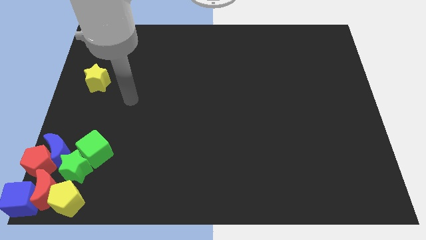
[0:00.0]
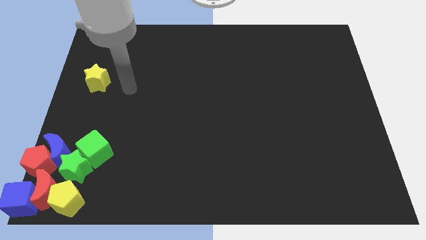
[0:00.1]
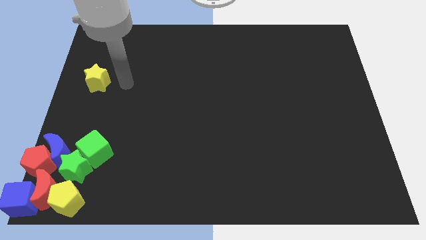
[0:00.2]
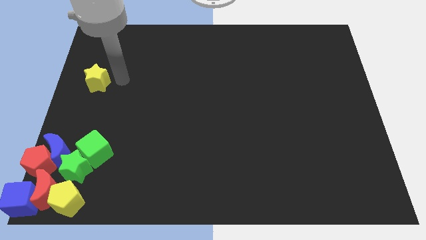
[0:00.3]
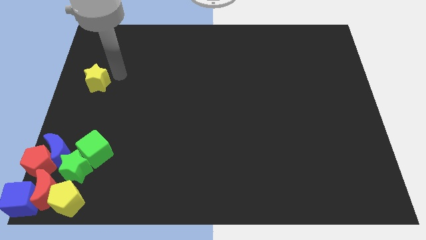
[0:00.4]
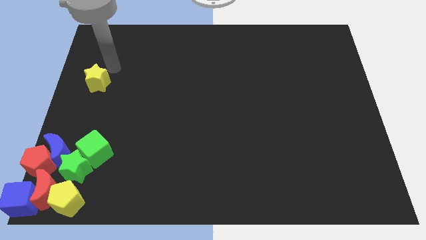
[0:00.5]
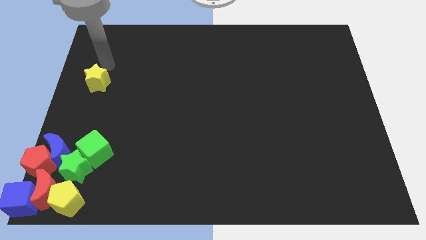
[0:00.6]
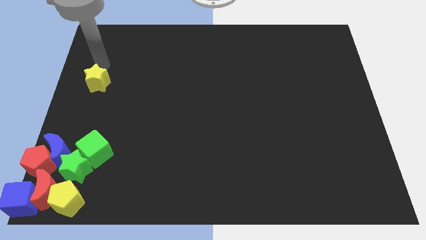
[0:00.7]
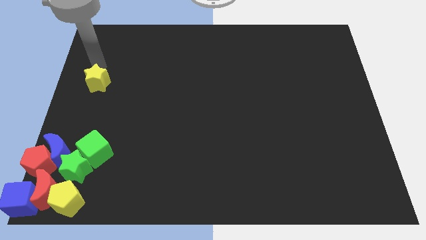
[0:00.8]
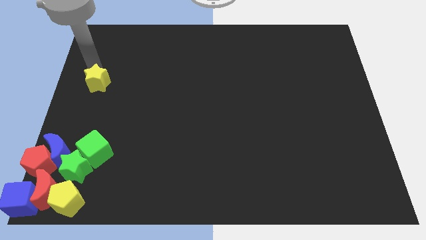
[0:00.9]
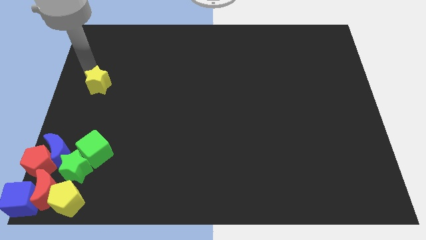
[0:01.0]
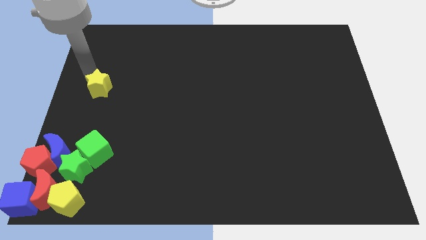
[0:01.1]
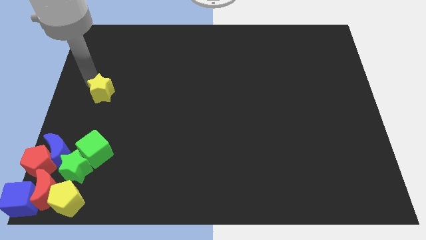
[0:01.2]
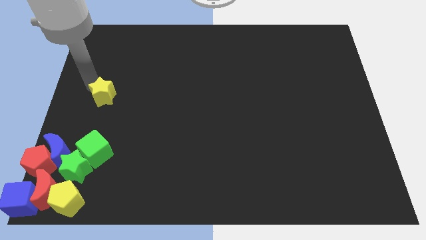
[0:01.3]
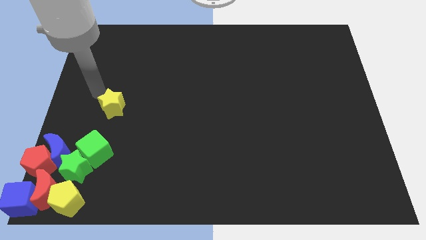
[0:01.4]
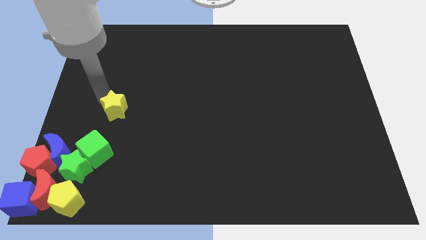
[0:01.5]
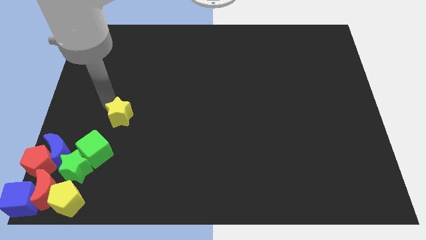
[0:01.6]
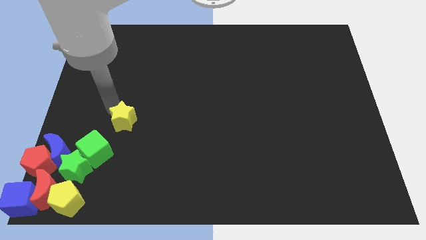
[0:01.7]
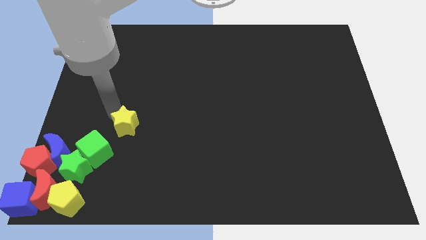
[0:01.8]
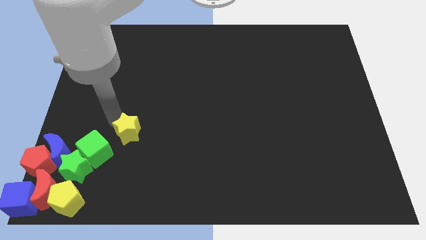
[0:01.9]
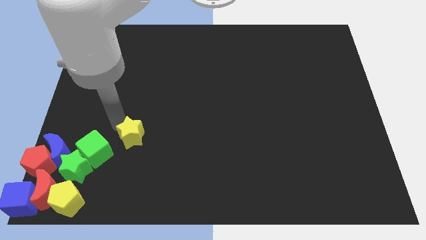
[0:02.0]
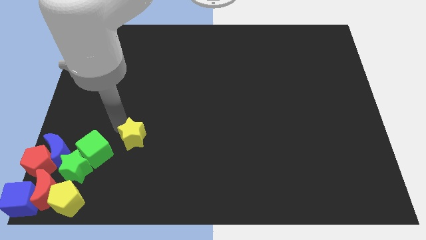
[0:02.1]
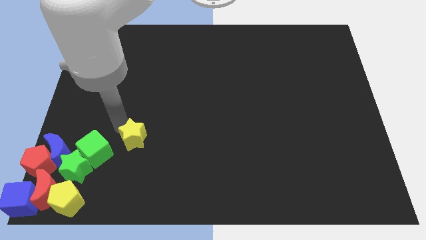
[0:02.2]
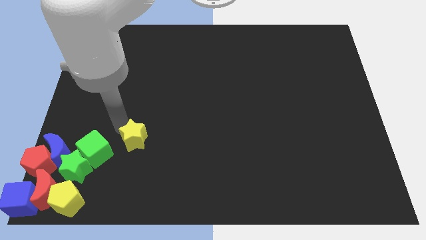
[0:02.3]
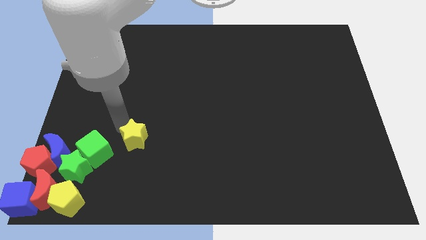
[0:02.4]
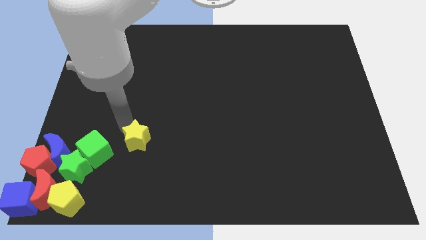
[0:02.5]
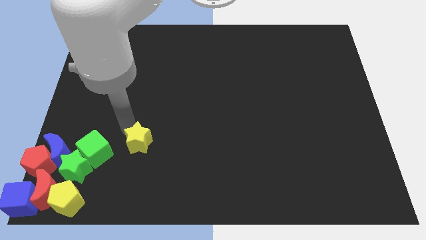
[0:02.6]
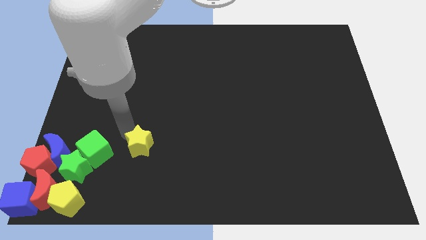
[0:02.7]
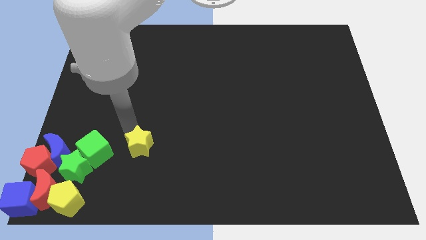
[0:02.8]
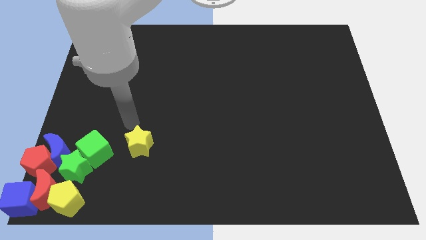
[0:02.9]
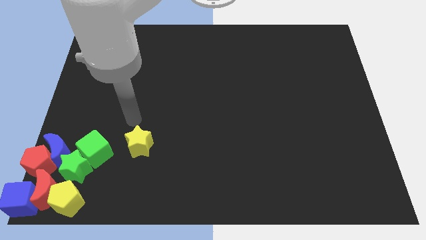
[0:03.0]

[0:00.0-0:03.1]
push the yellow star to the right of the green cube

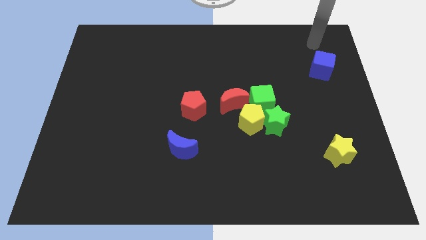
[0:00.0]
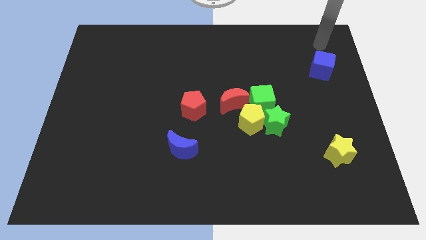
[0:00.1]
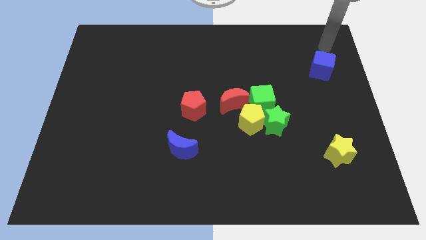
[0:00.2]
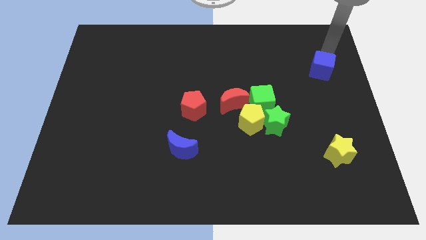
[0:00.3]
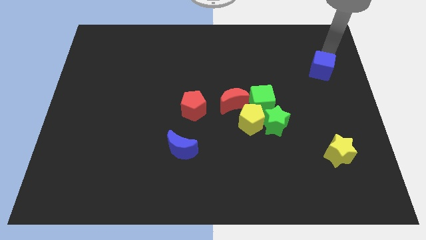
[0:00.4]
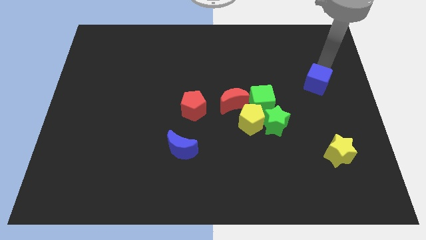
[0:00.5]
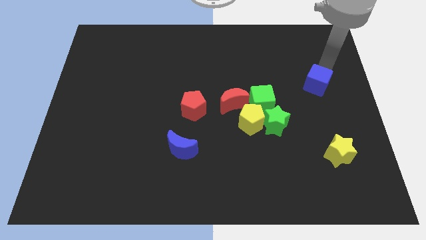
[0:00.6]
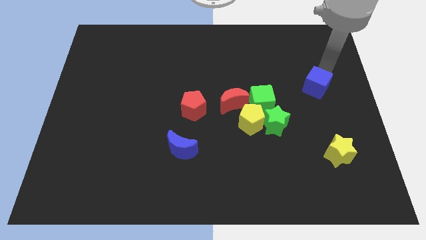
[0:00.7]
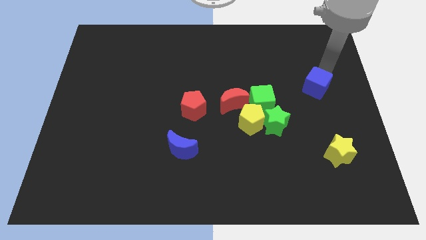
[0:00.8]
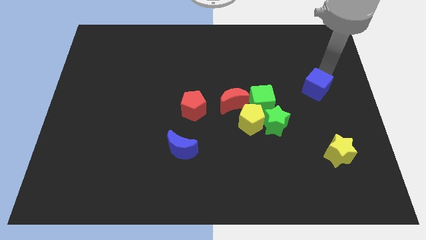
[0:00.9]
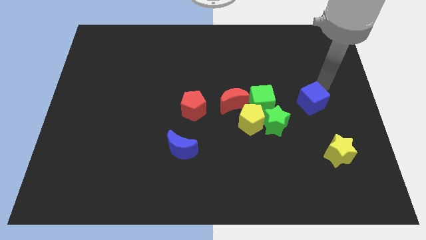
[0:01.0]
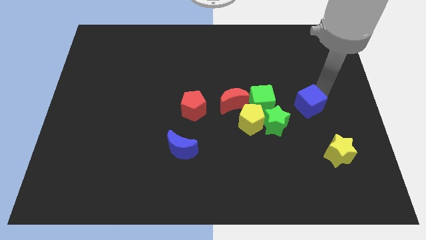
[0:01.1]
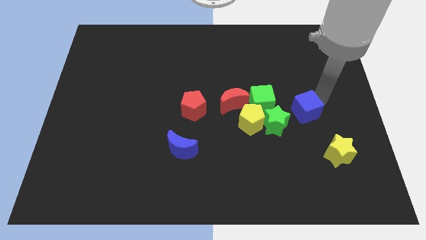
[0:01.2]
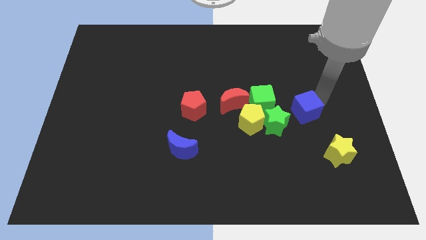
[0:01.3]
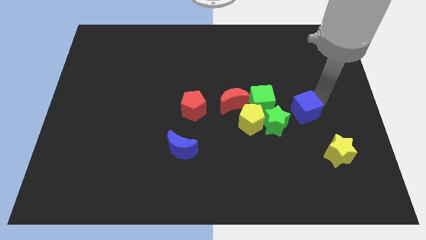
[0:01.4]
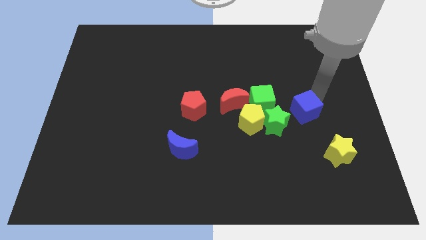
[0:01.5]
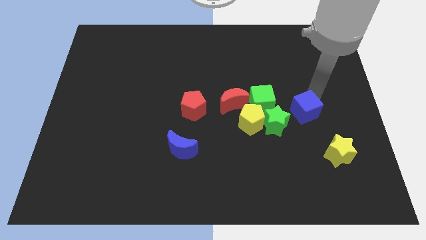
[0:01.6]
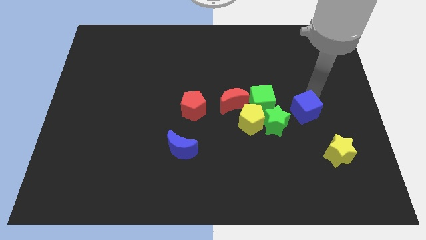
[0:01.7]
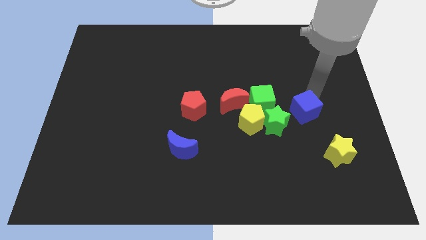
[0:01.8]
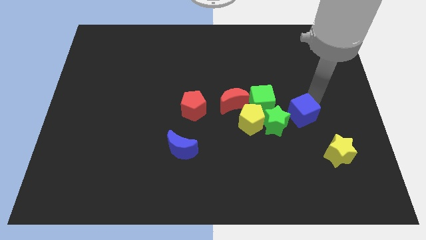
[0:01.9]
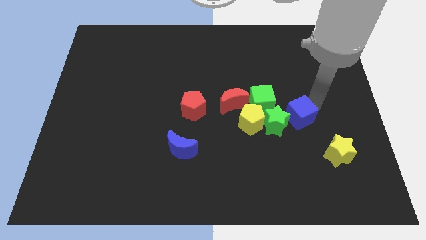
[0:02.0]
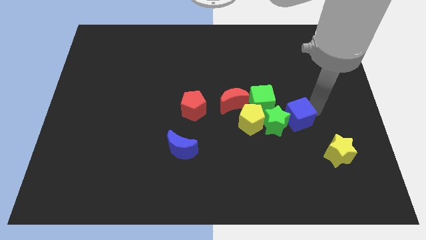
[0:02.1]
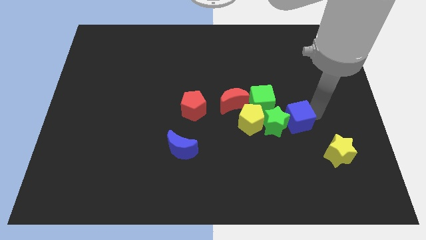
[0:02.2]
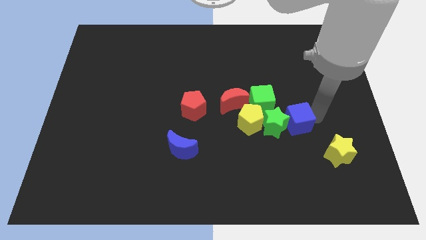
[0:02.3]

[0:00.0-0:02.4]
place blue cube to the right of green star

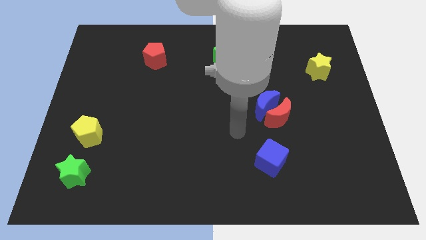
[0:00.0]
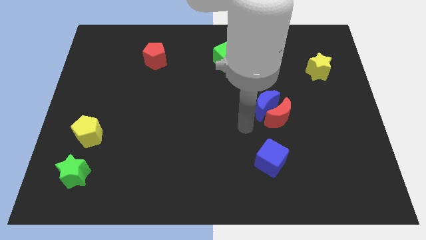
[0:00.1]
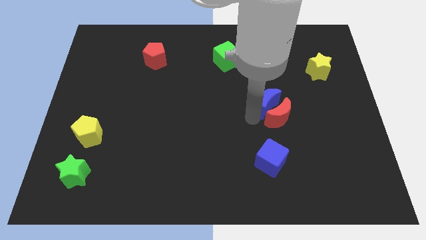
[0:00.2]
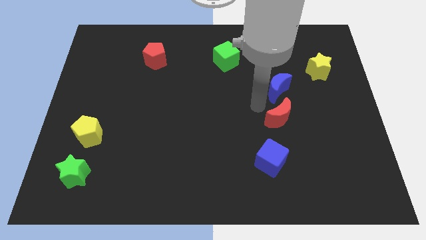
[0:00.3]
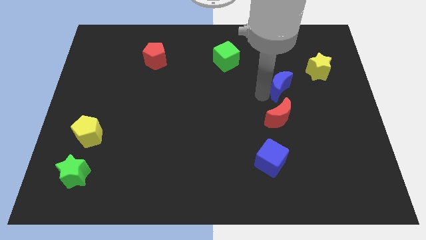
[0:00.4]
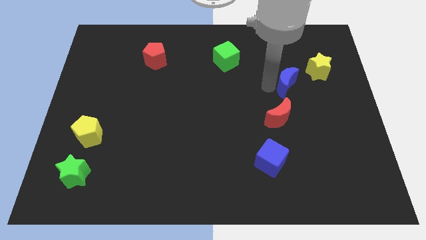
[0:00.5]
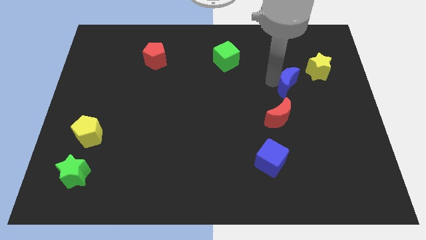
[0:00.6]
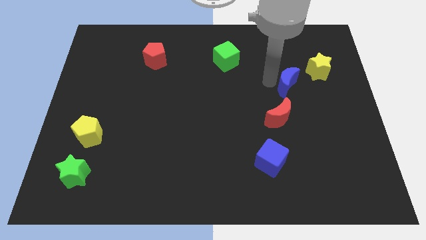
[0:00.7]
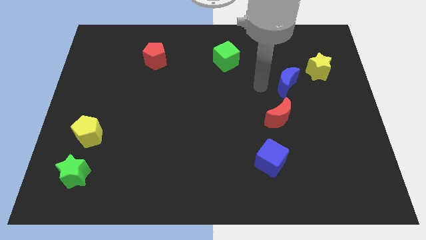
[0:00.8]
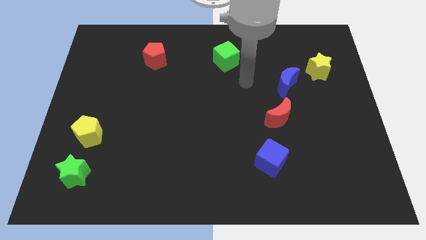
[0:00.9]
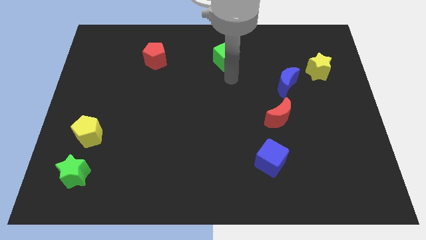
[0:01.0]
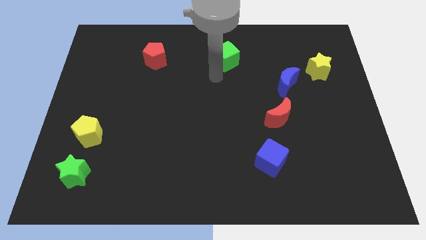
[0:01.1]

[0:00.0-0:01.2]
slide blue crescent towards yellow star

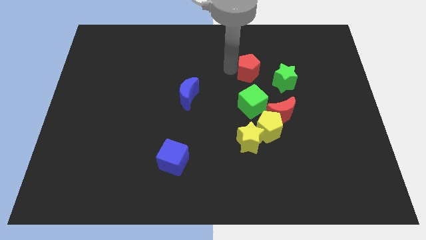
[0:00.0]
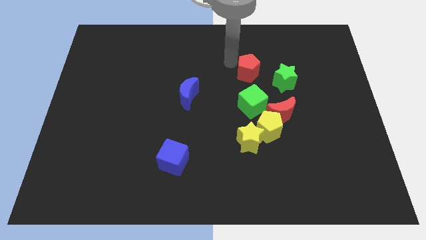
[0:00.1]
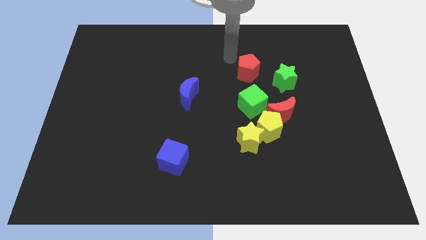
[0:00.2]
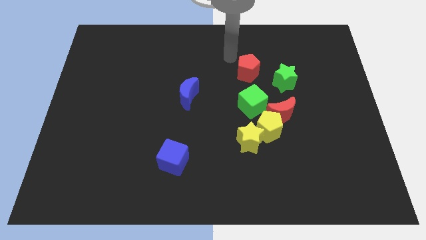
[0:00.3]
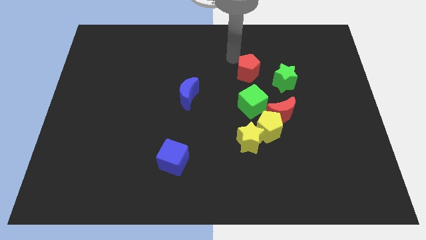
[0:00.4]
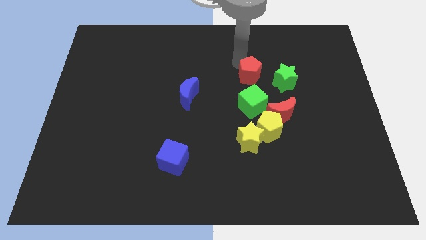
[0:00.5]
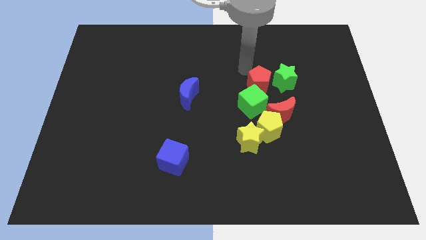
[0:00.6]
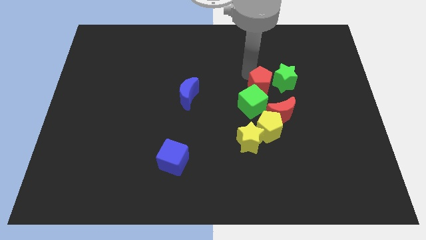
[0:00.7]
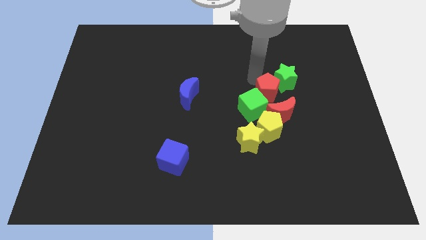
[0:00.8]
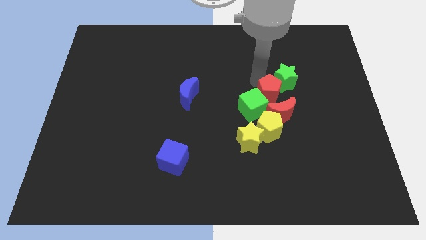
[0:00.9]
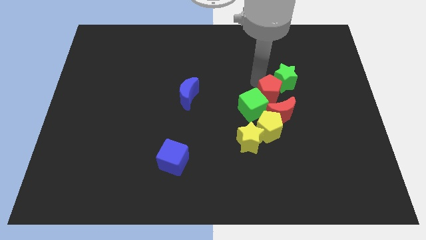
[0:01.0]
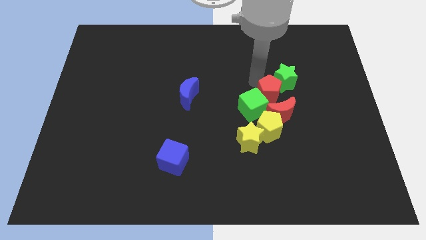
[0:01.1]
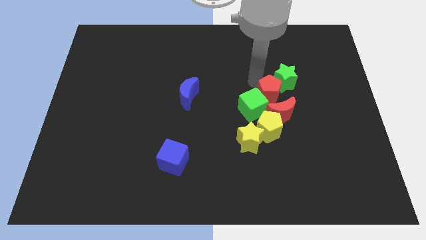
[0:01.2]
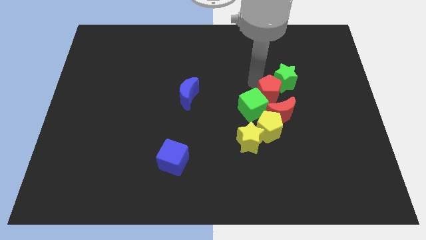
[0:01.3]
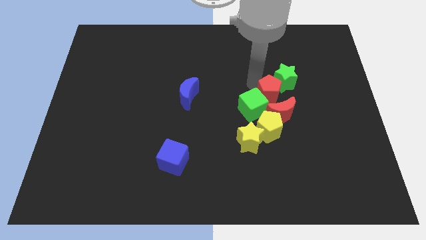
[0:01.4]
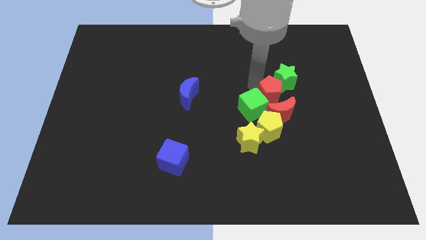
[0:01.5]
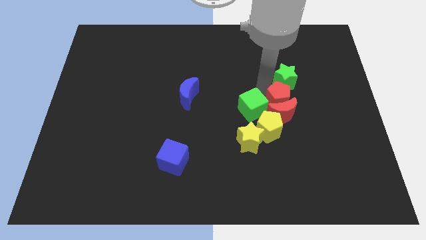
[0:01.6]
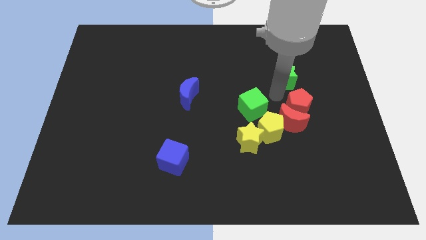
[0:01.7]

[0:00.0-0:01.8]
slide the red pentagon in between the green star and green cube

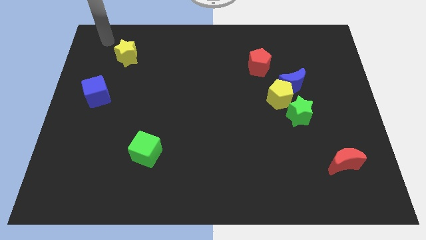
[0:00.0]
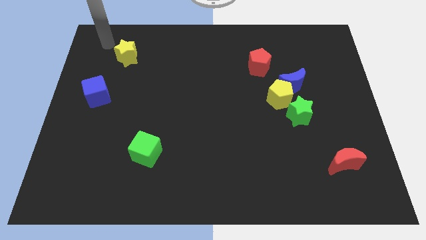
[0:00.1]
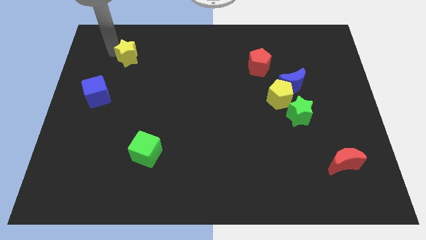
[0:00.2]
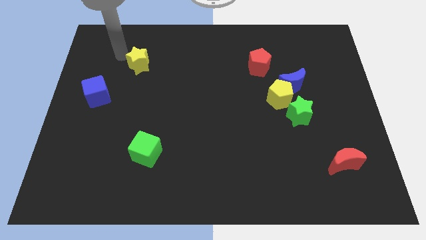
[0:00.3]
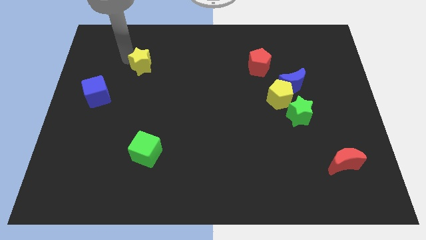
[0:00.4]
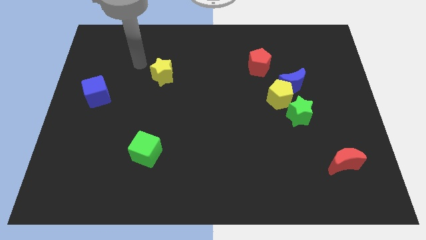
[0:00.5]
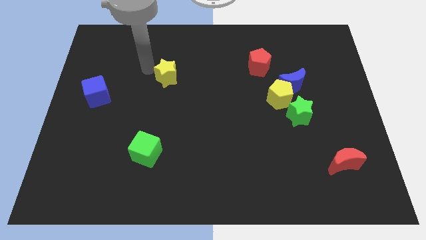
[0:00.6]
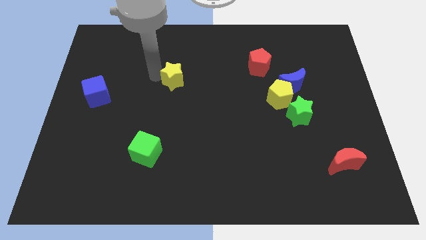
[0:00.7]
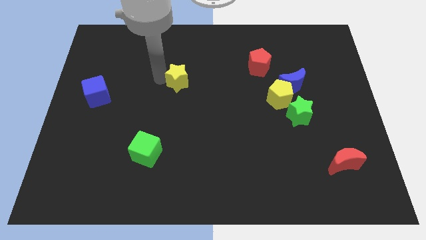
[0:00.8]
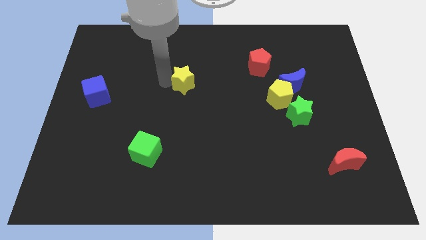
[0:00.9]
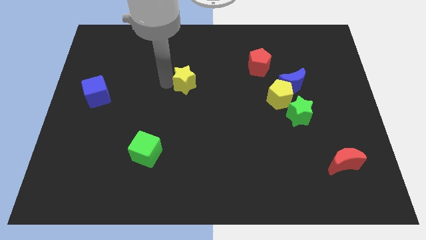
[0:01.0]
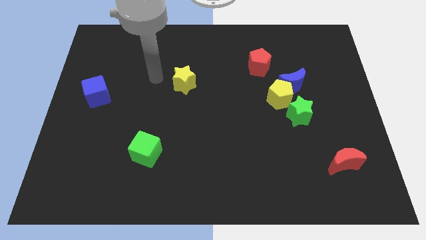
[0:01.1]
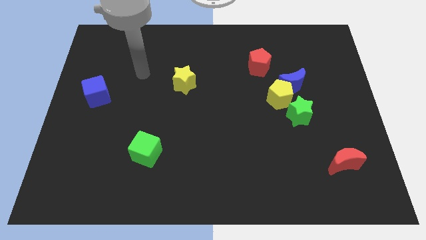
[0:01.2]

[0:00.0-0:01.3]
place yellow star to the center of the board
